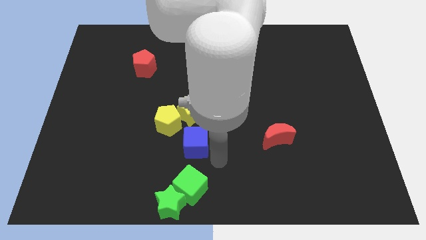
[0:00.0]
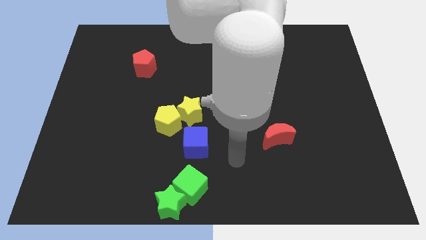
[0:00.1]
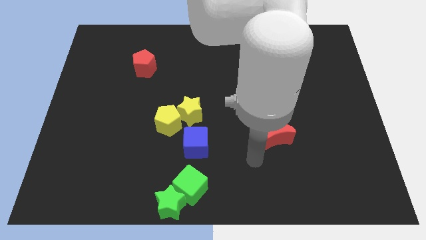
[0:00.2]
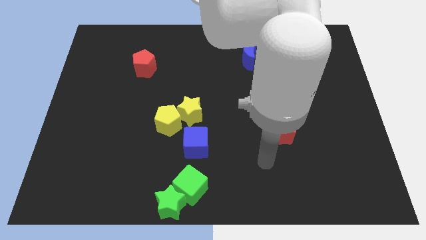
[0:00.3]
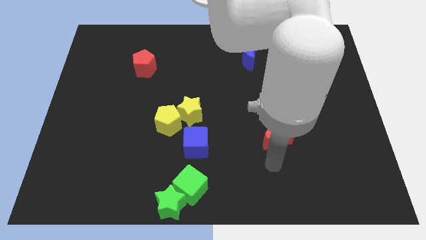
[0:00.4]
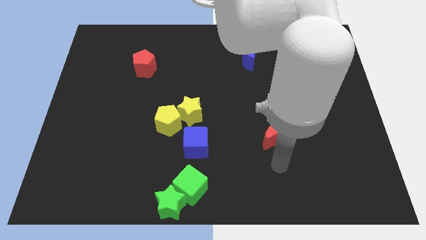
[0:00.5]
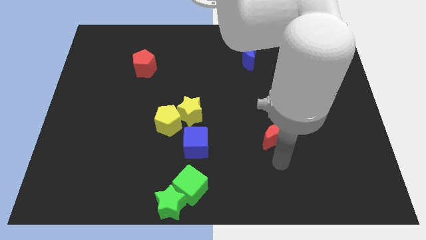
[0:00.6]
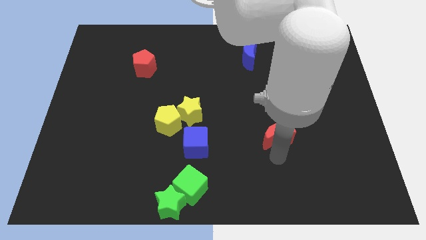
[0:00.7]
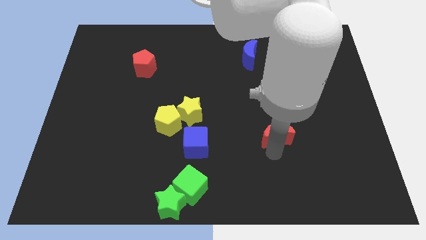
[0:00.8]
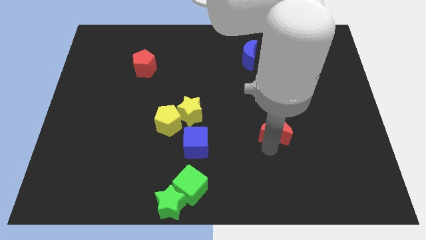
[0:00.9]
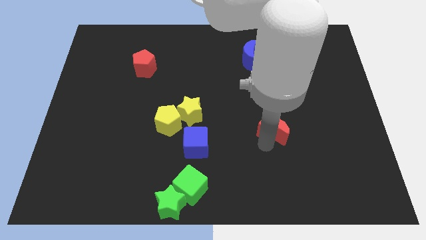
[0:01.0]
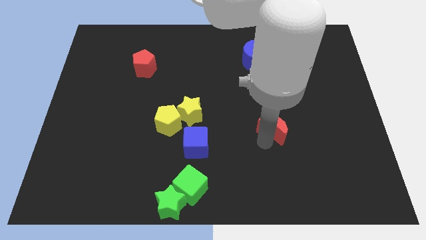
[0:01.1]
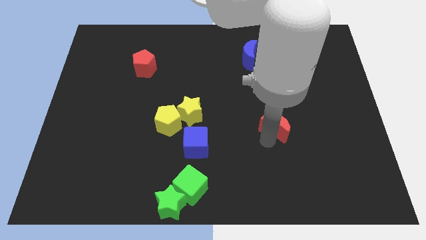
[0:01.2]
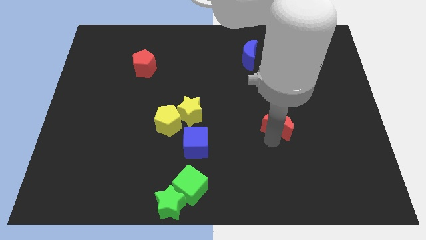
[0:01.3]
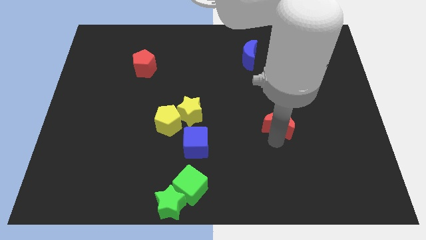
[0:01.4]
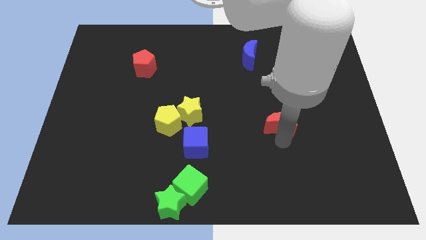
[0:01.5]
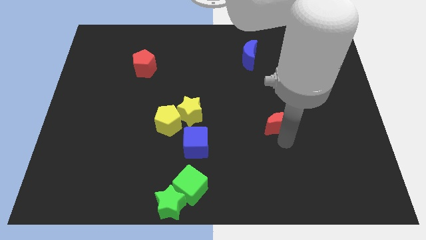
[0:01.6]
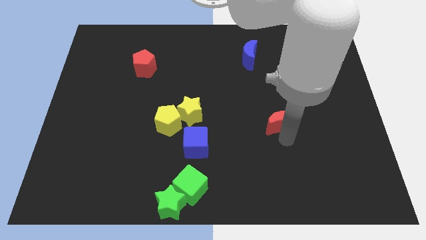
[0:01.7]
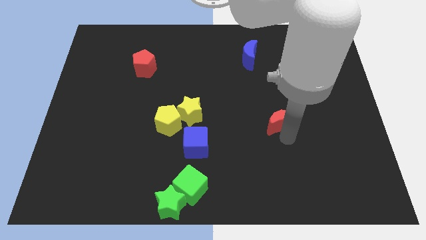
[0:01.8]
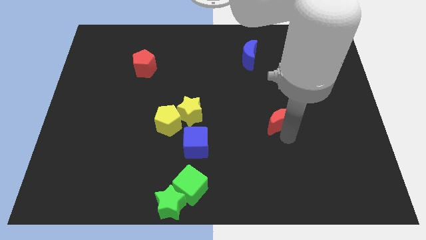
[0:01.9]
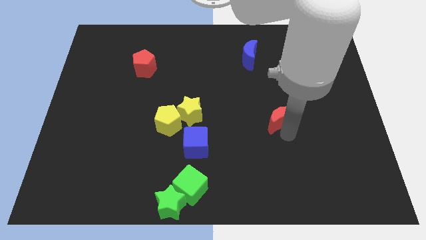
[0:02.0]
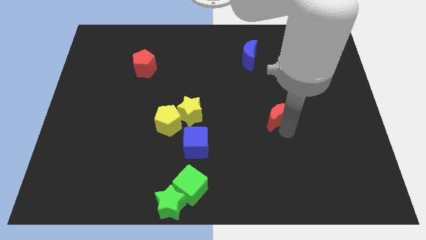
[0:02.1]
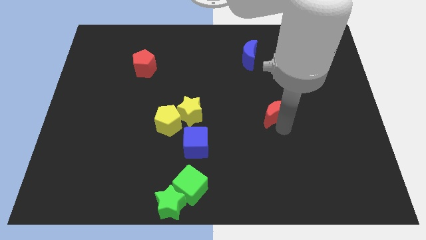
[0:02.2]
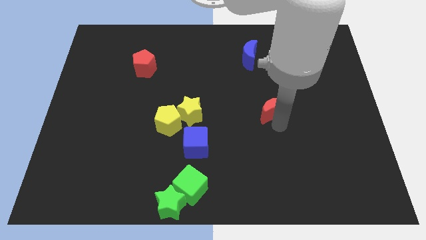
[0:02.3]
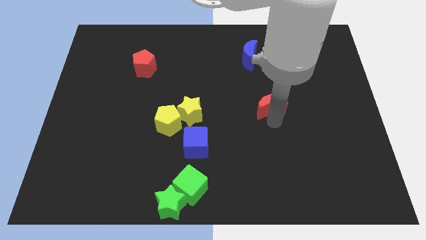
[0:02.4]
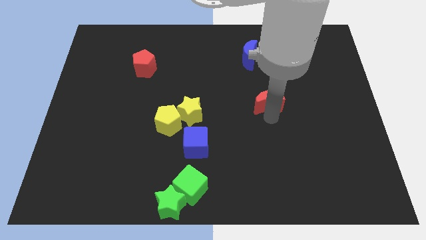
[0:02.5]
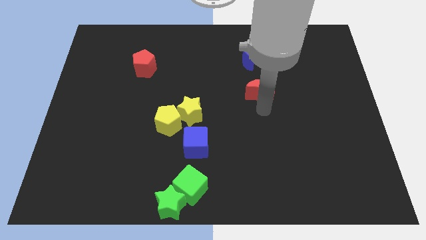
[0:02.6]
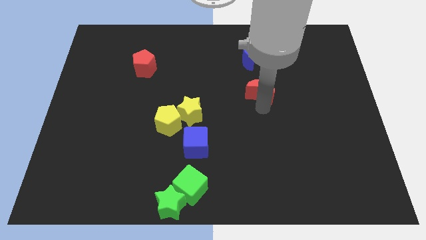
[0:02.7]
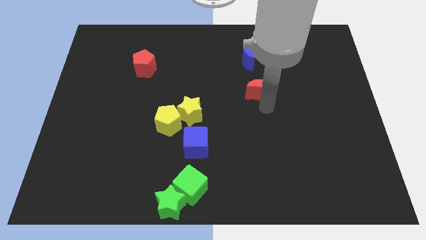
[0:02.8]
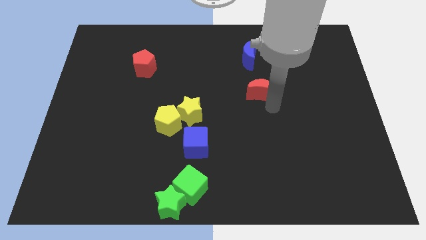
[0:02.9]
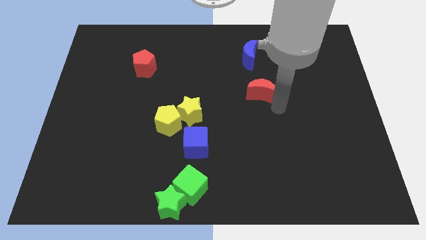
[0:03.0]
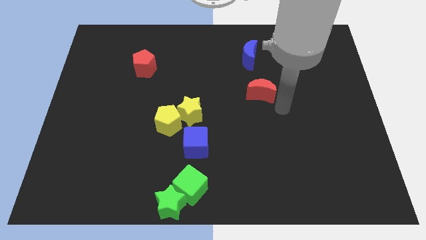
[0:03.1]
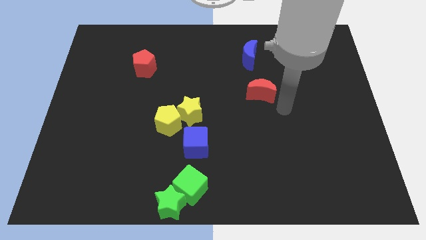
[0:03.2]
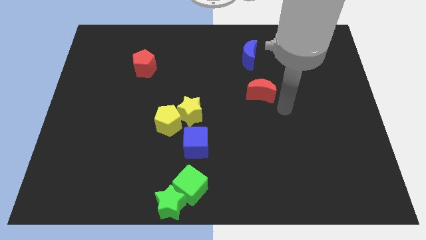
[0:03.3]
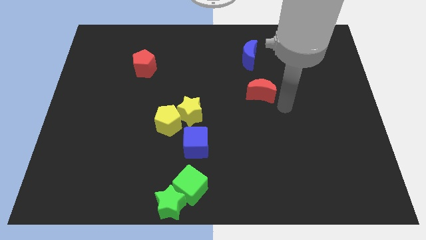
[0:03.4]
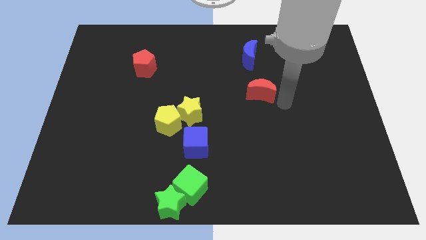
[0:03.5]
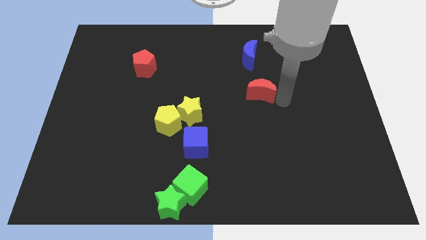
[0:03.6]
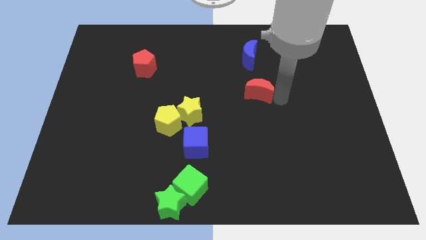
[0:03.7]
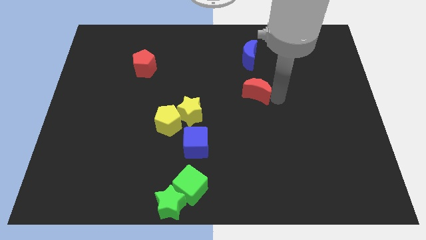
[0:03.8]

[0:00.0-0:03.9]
move the red crescent towards the bottom side of the blue crescent

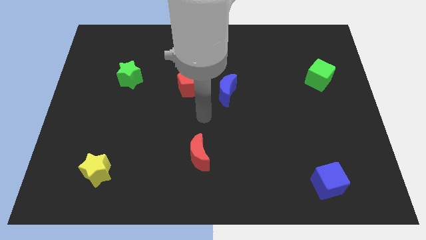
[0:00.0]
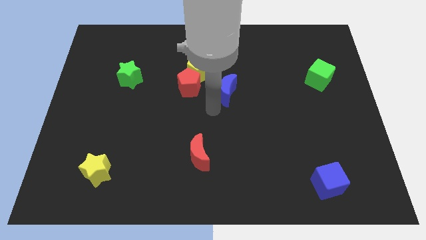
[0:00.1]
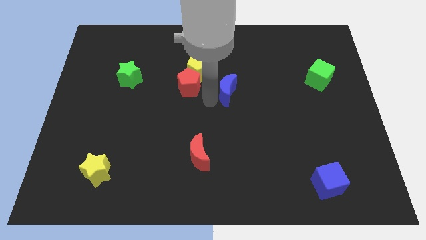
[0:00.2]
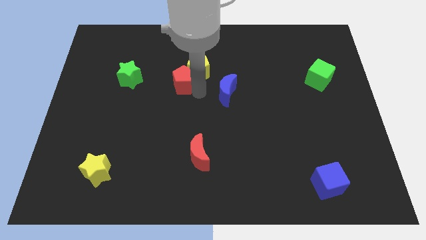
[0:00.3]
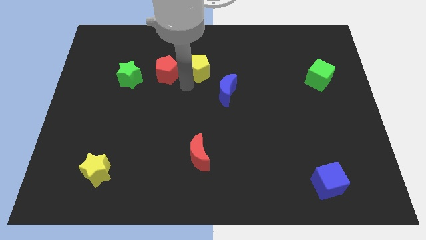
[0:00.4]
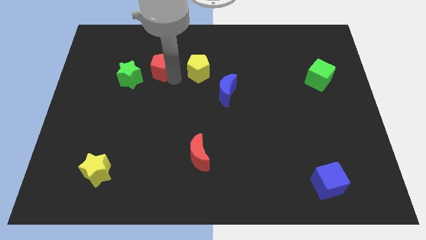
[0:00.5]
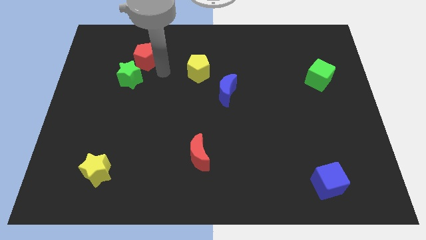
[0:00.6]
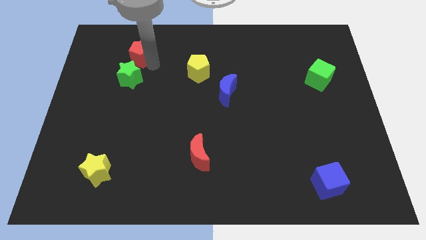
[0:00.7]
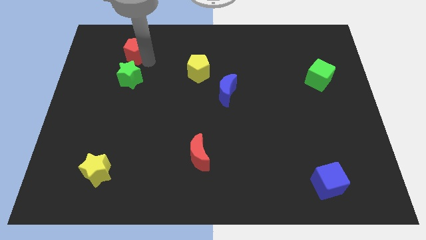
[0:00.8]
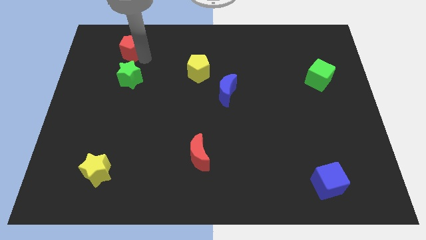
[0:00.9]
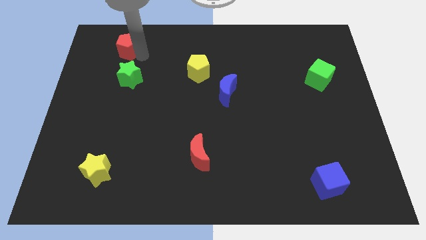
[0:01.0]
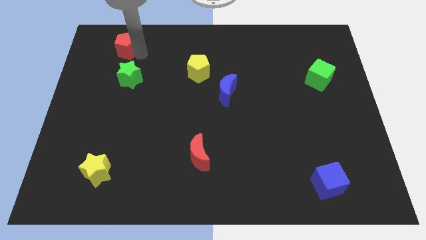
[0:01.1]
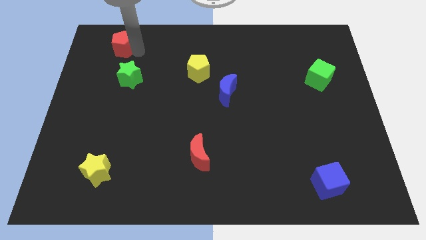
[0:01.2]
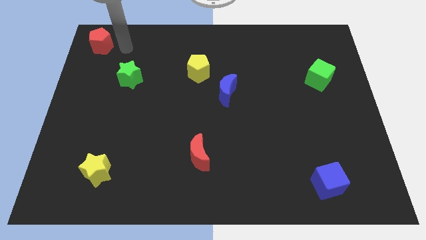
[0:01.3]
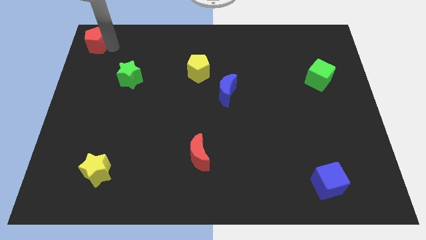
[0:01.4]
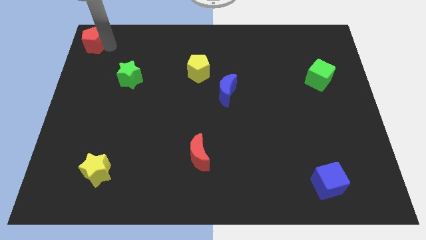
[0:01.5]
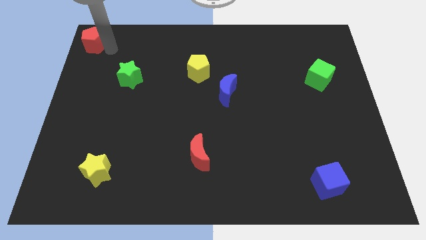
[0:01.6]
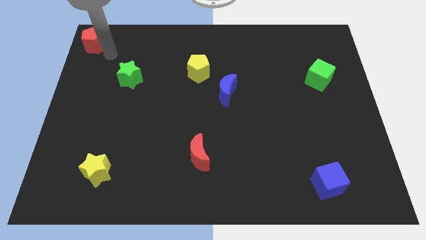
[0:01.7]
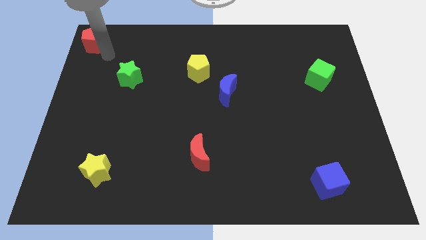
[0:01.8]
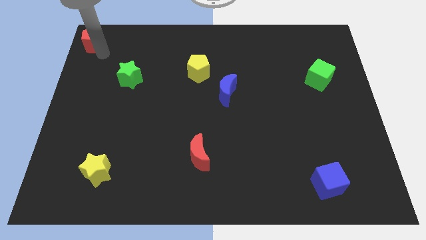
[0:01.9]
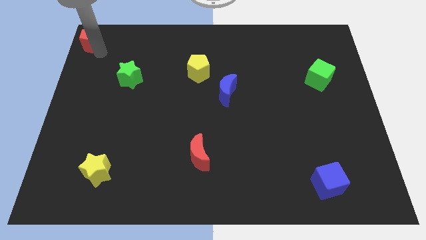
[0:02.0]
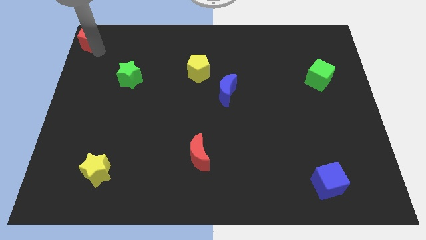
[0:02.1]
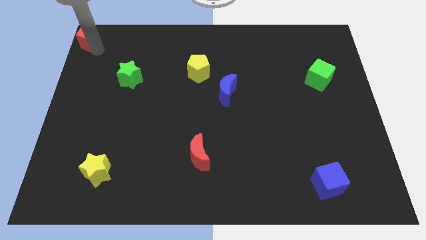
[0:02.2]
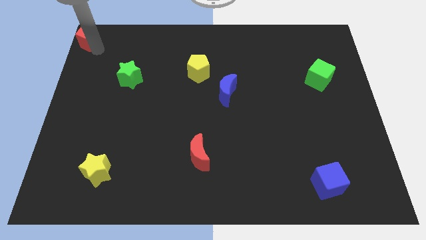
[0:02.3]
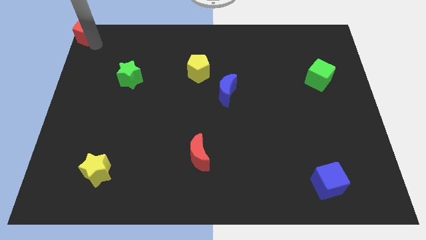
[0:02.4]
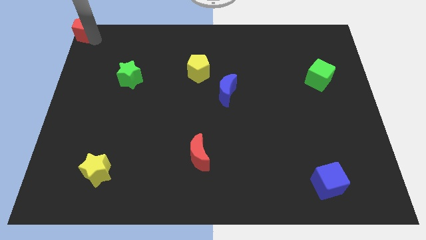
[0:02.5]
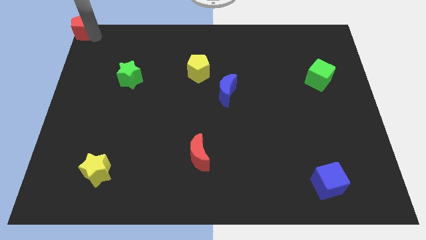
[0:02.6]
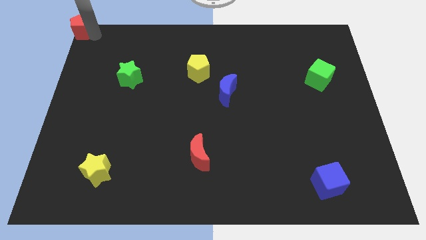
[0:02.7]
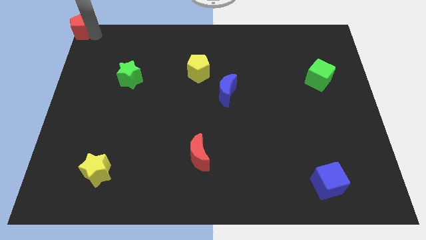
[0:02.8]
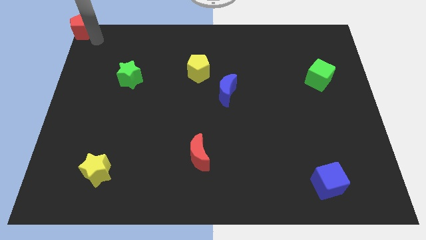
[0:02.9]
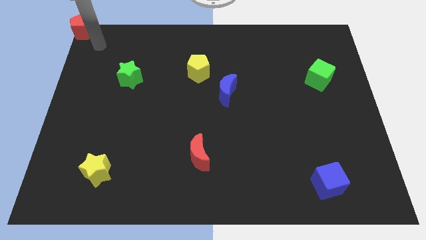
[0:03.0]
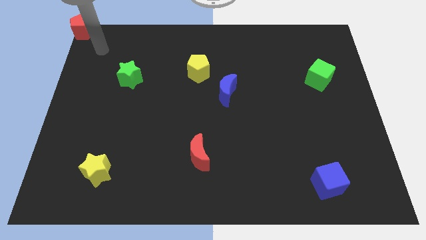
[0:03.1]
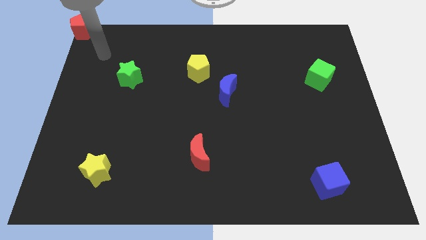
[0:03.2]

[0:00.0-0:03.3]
push the red pentagon to the top left of the board

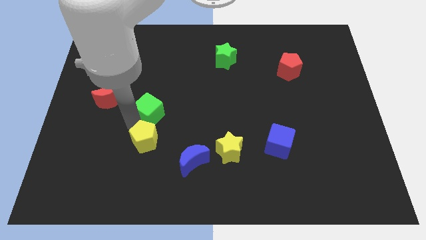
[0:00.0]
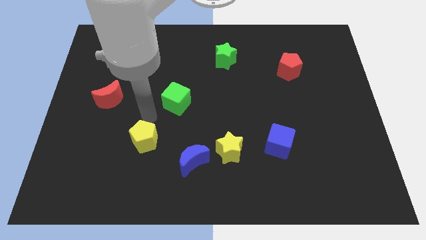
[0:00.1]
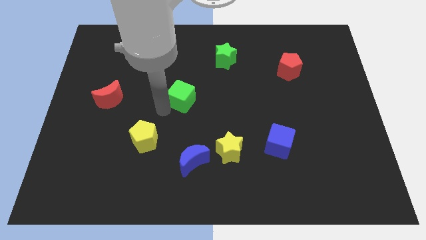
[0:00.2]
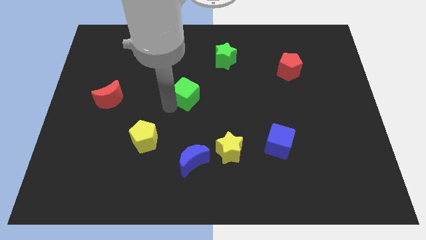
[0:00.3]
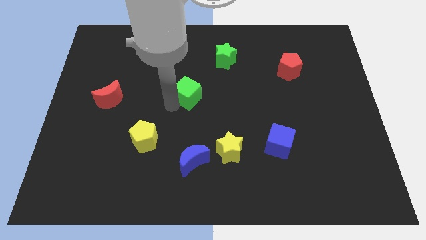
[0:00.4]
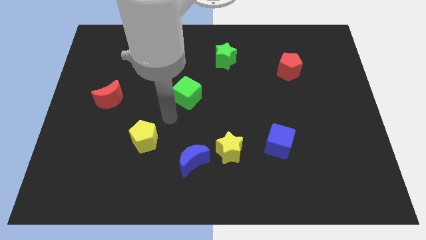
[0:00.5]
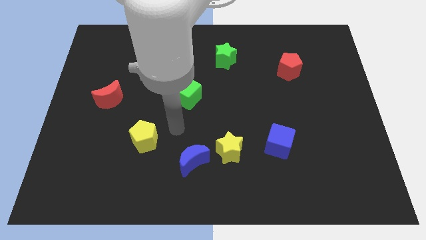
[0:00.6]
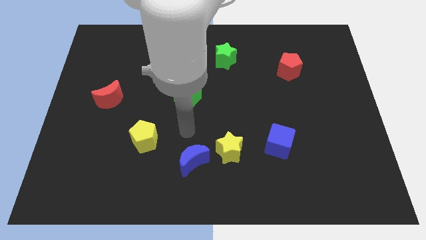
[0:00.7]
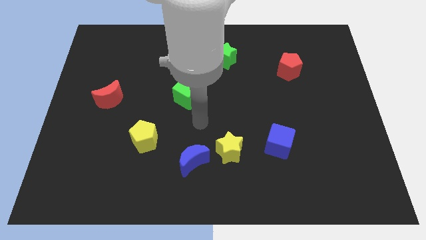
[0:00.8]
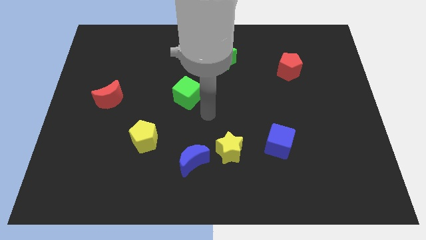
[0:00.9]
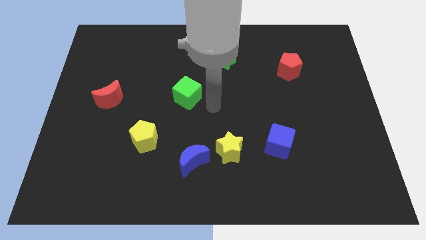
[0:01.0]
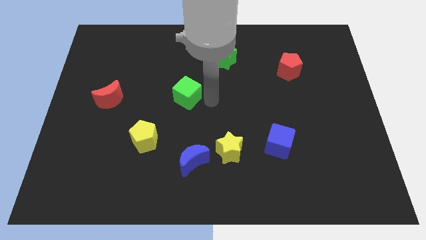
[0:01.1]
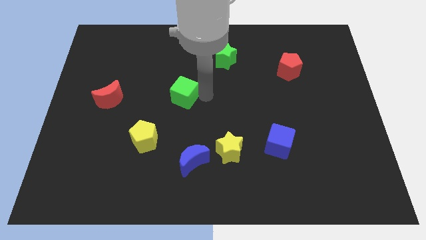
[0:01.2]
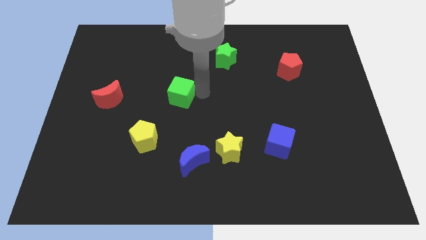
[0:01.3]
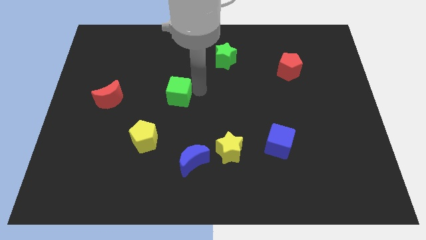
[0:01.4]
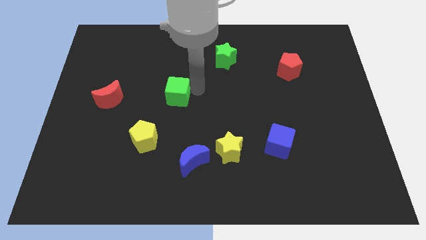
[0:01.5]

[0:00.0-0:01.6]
place the green cube to the right side of the red crescent
